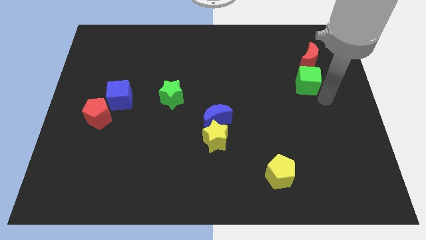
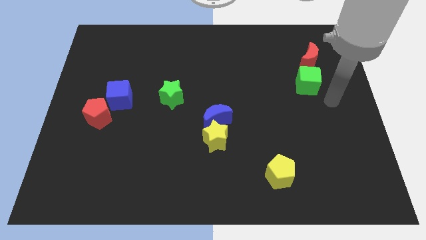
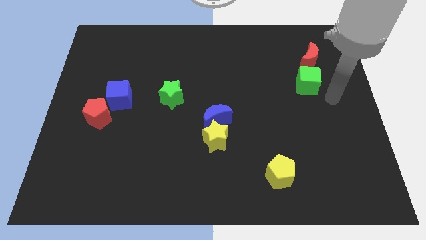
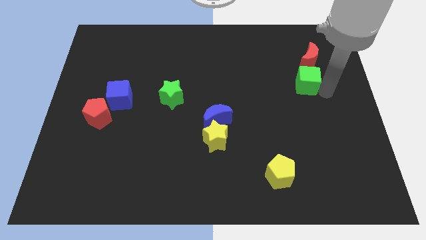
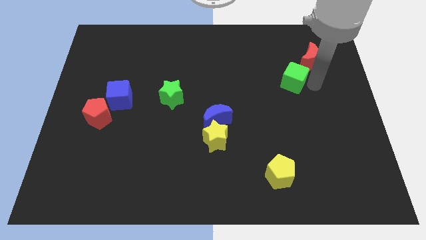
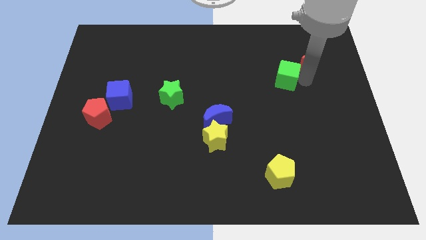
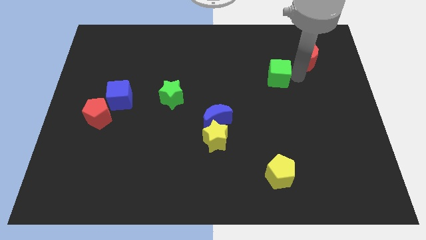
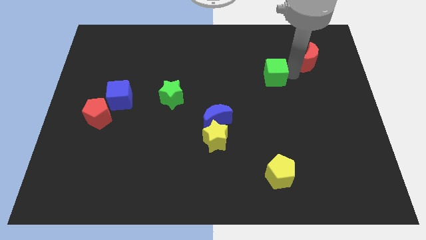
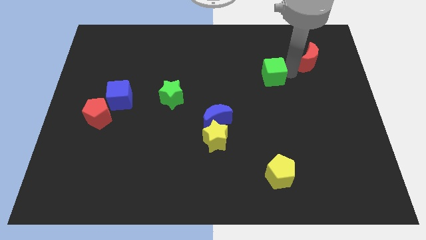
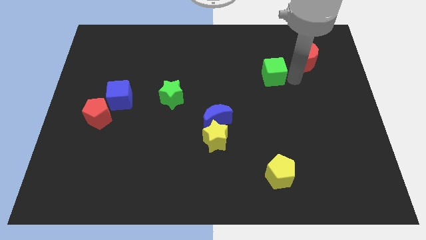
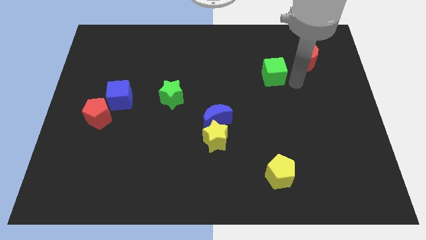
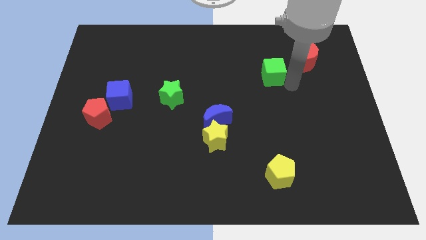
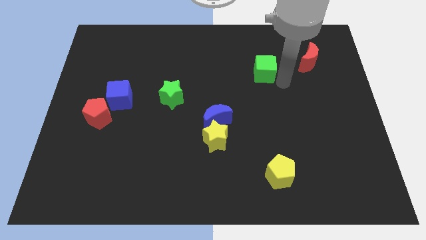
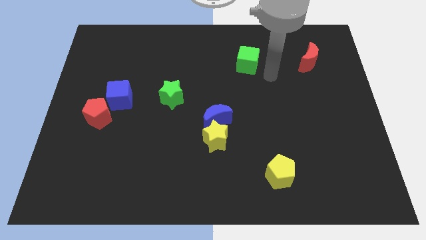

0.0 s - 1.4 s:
move the green cube to the top center

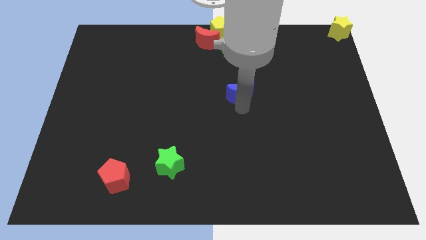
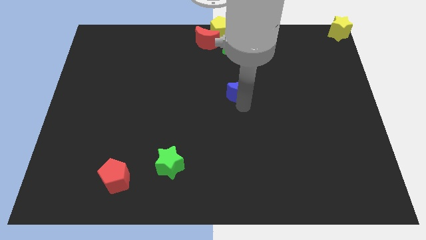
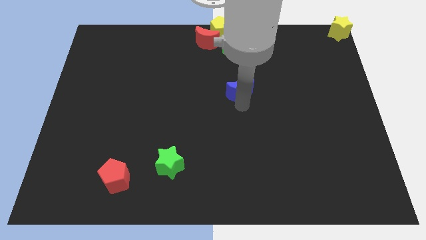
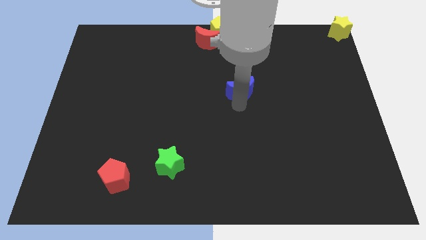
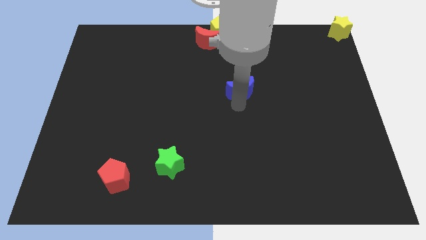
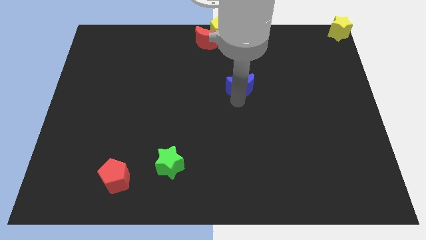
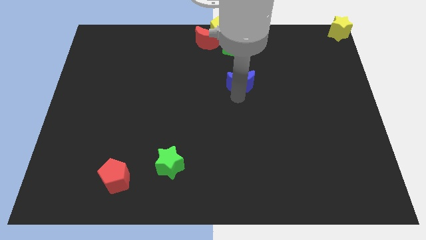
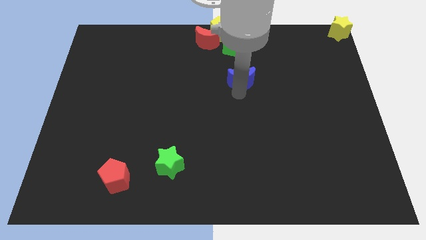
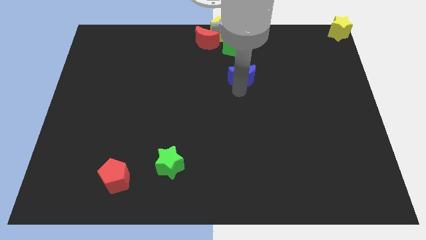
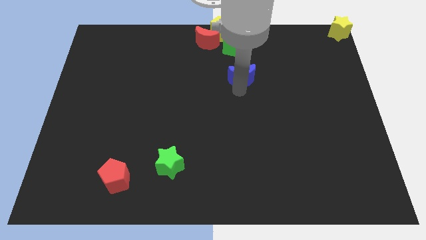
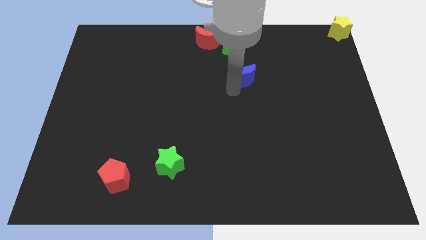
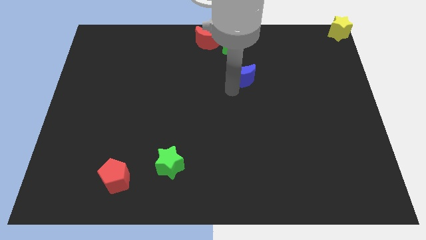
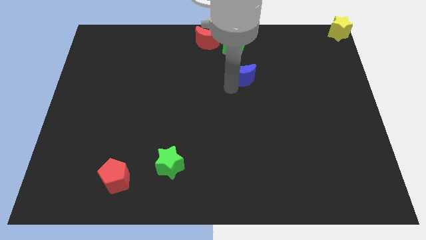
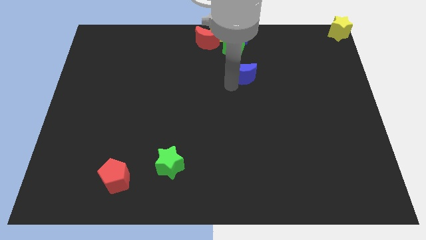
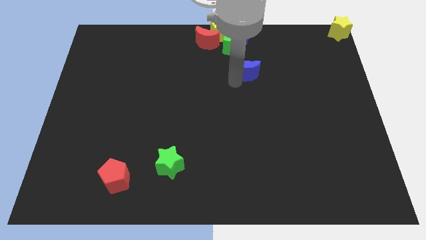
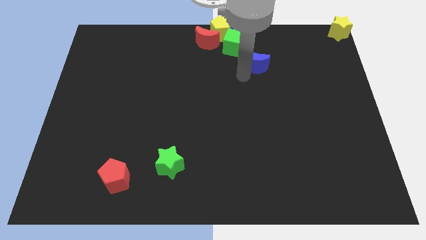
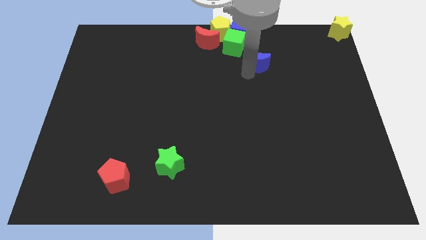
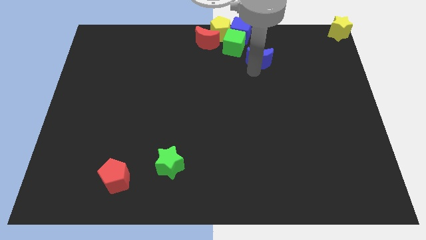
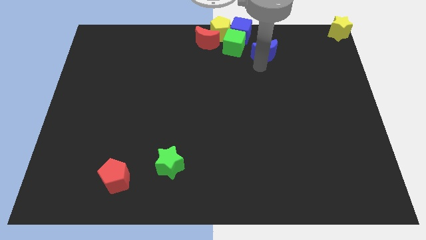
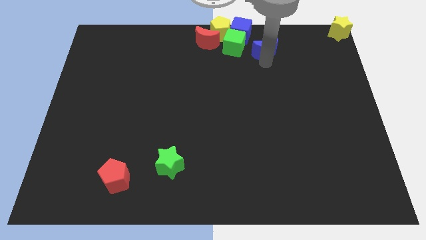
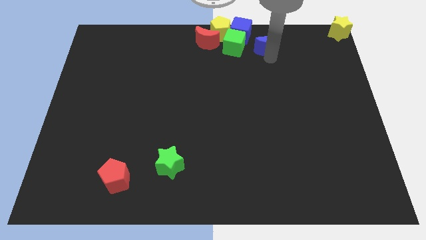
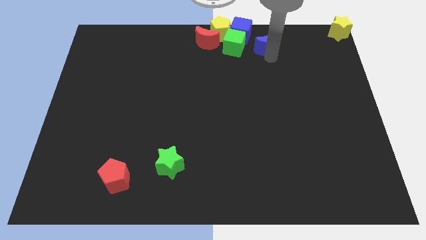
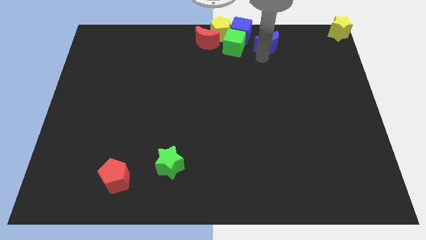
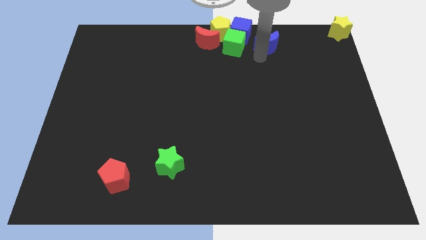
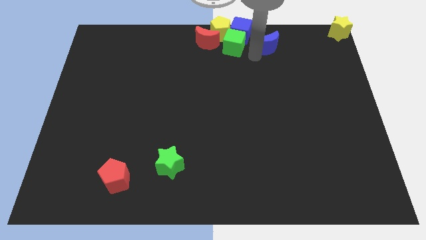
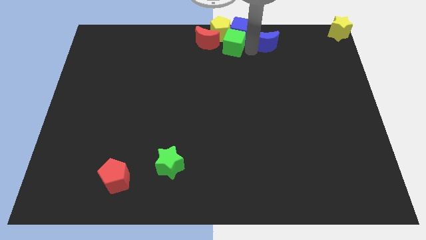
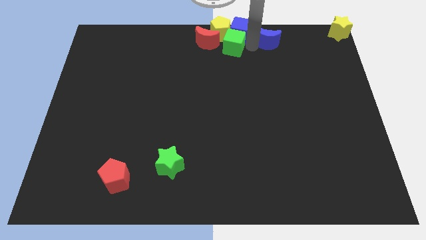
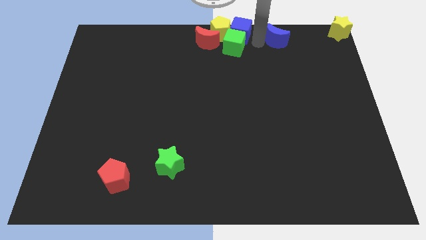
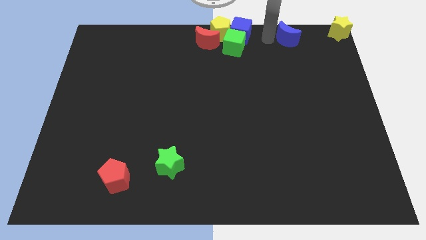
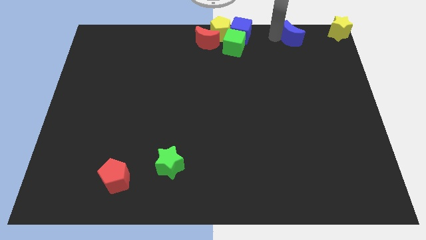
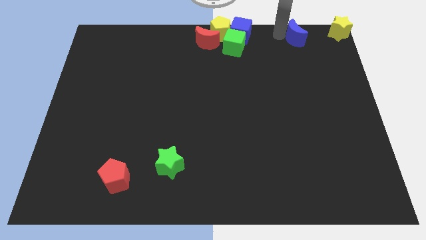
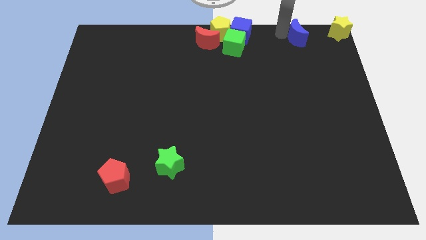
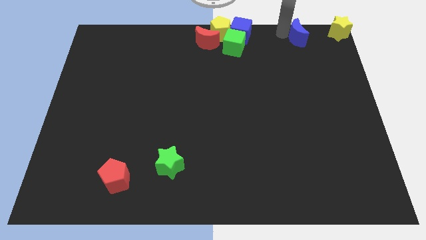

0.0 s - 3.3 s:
put the blue crescent parallel right to the blue cube

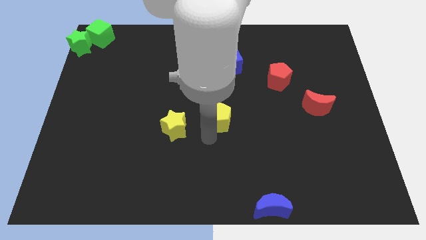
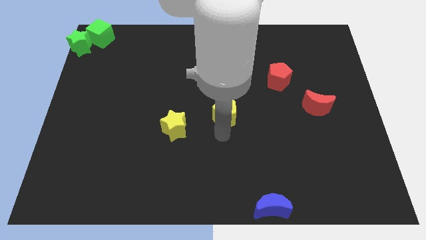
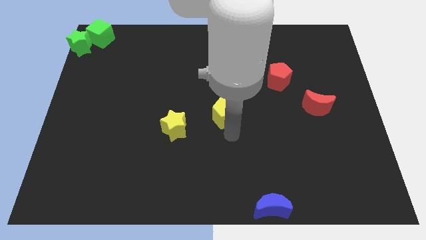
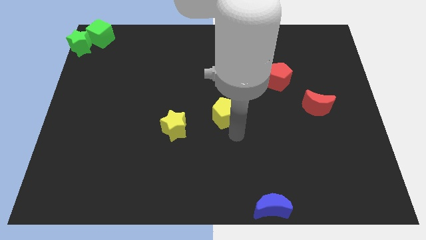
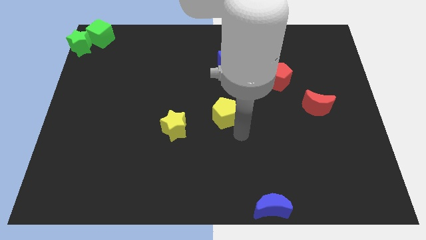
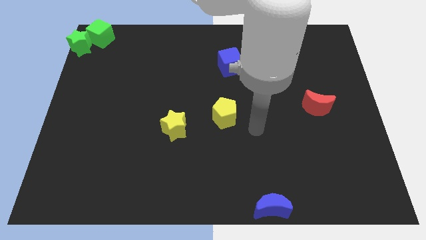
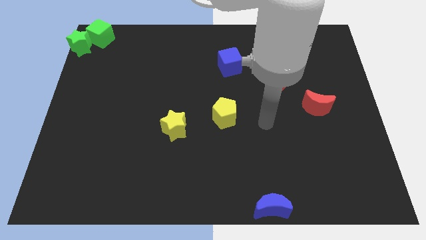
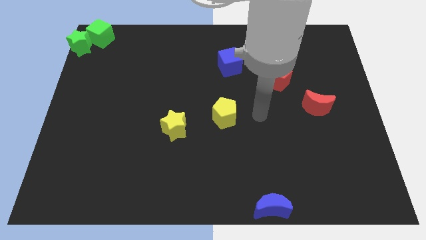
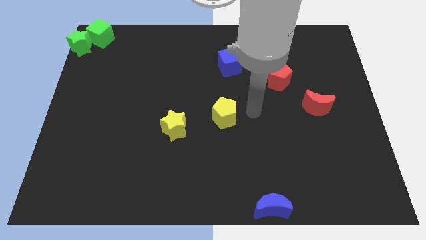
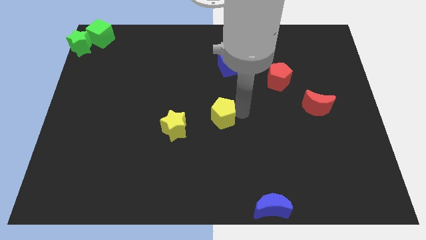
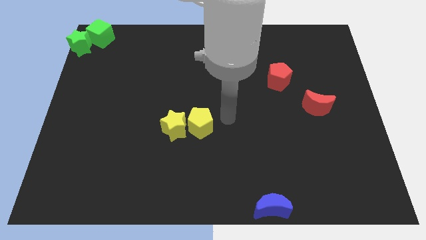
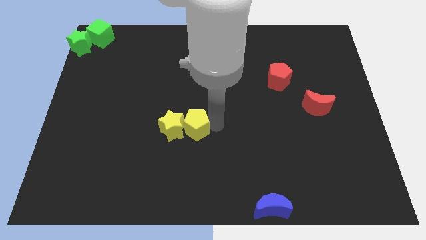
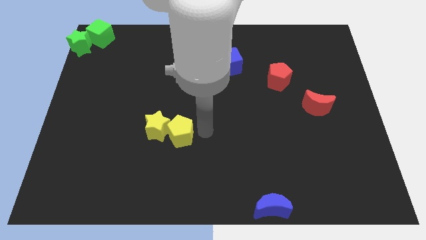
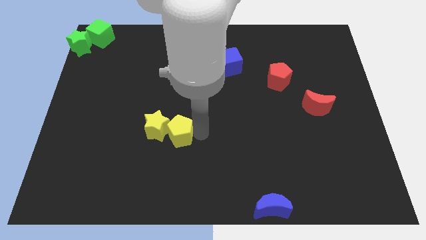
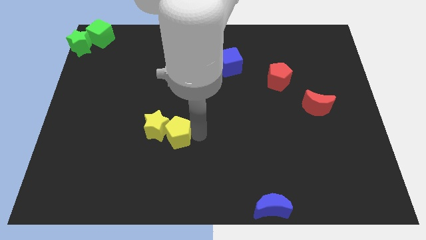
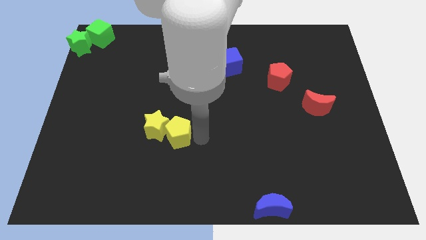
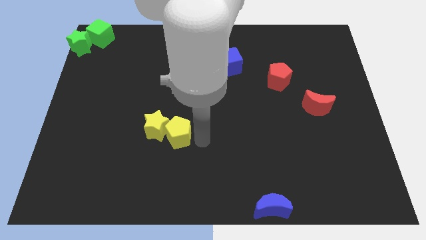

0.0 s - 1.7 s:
push the yellow pentagon into the yellow star

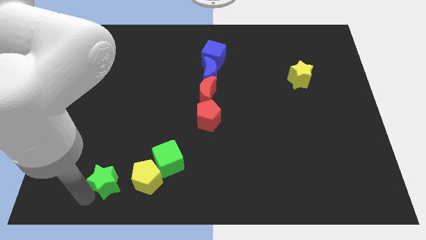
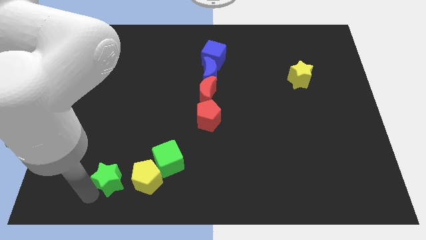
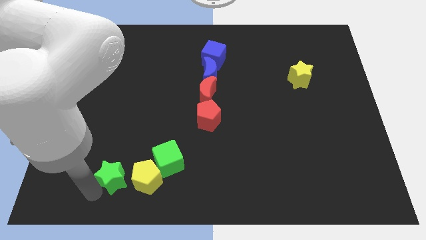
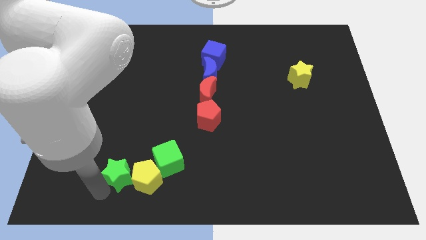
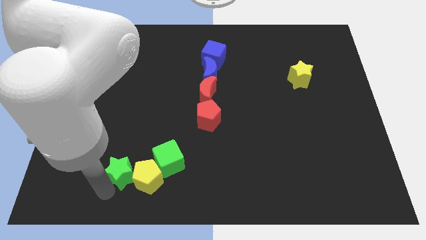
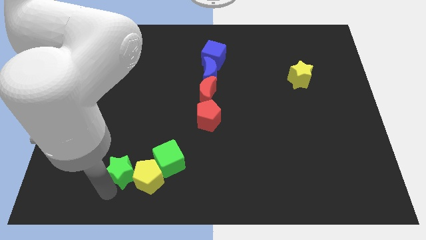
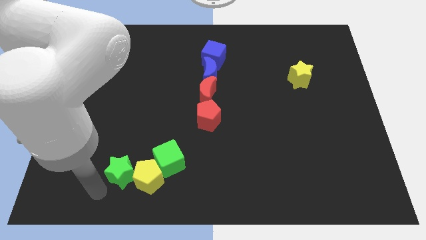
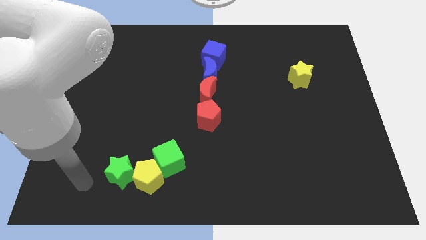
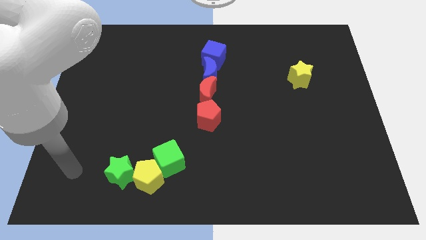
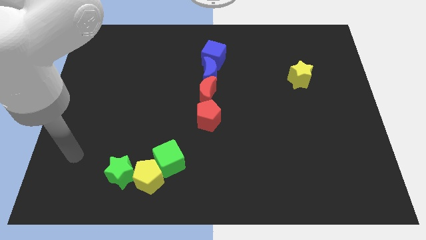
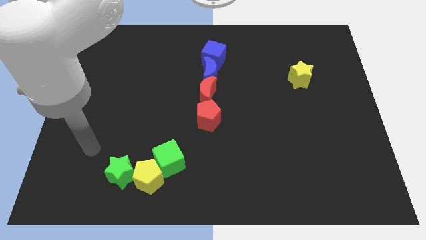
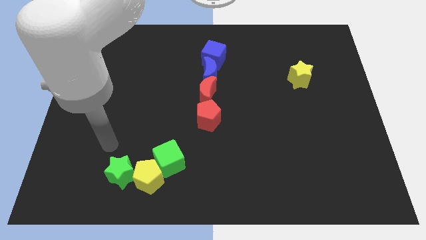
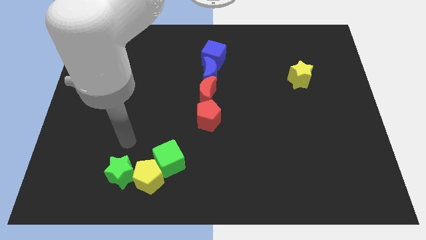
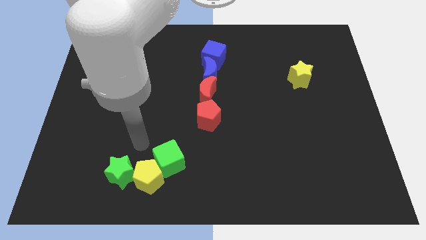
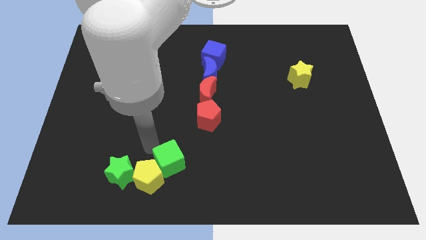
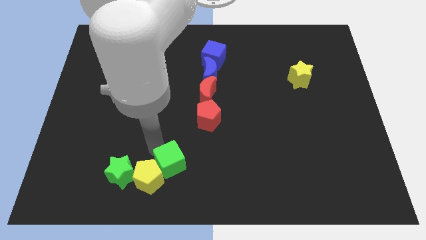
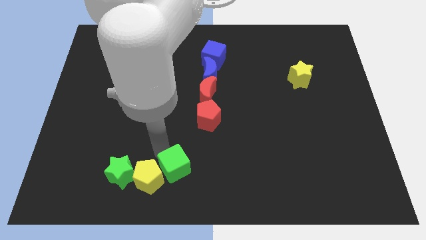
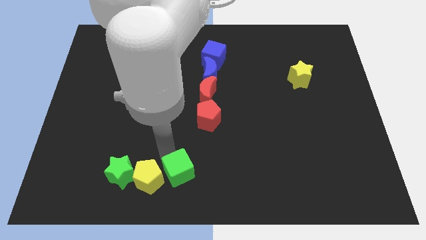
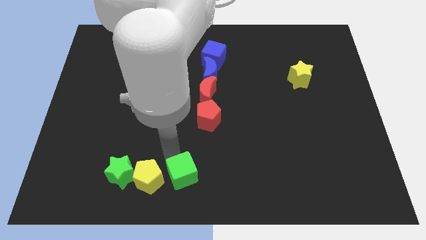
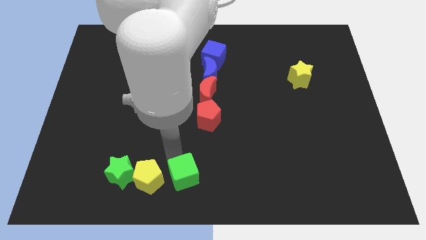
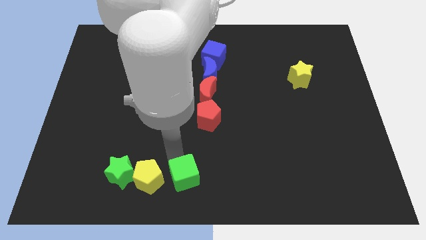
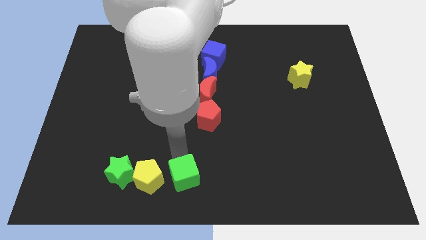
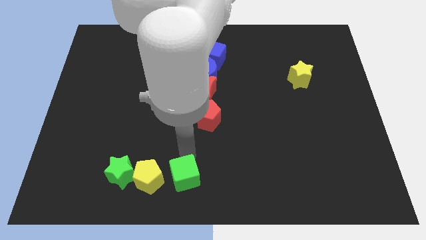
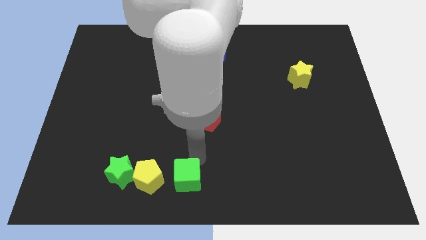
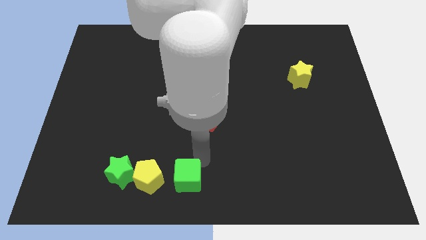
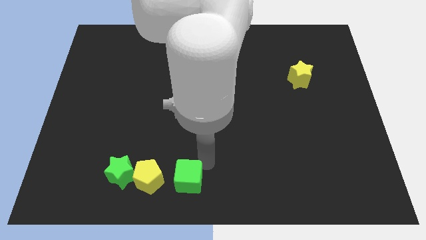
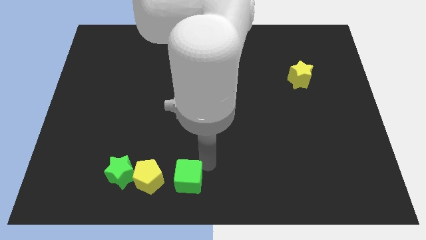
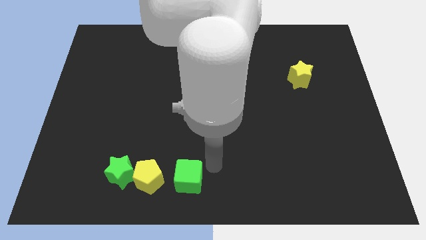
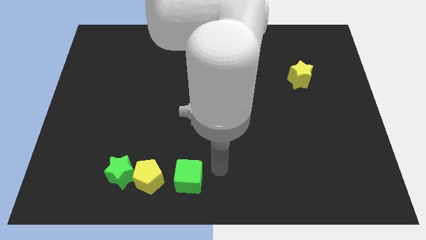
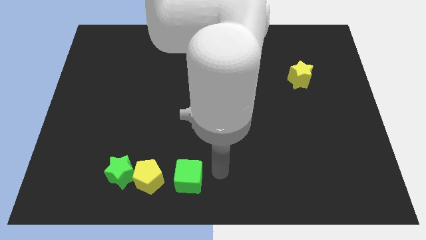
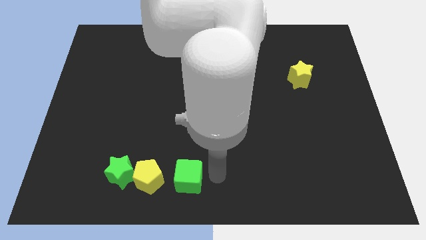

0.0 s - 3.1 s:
place green cube yellow pentagongreen star in a horizontal row
